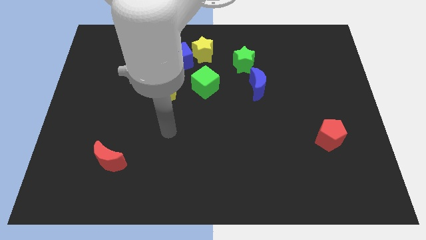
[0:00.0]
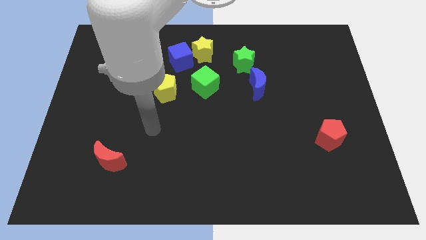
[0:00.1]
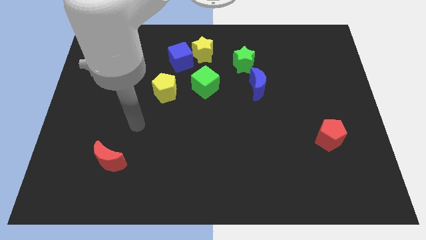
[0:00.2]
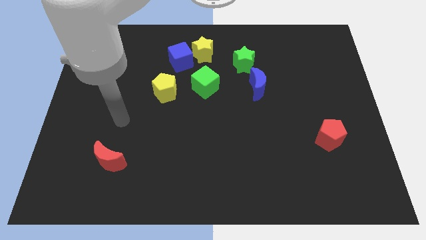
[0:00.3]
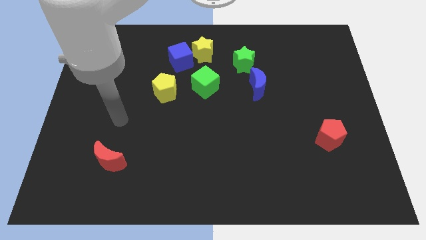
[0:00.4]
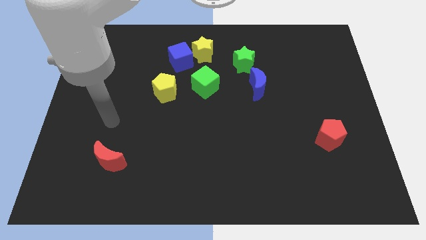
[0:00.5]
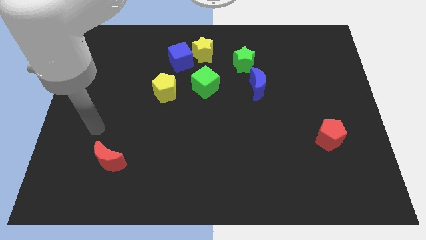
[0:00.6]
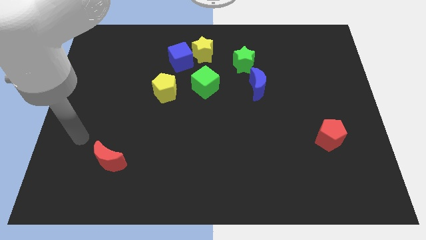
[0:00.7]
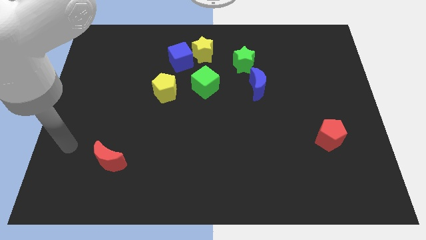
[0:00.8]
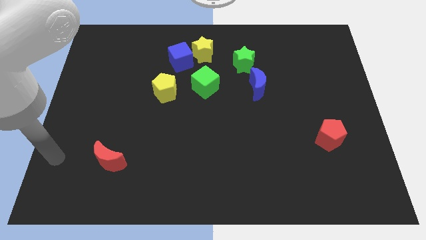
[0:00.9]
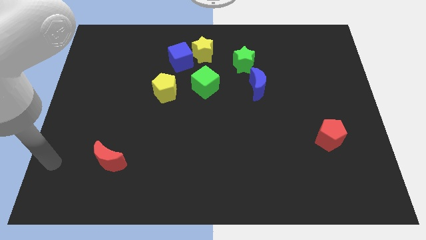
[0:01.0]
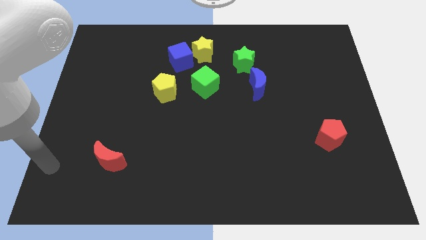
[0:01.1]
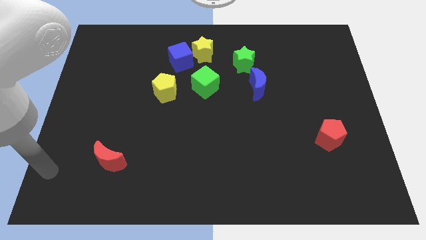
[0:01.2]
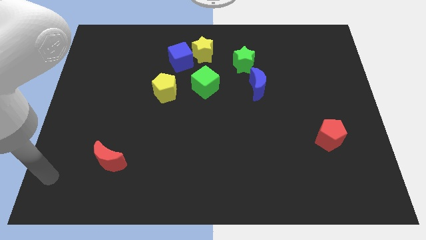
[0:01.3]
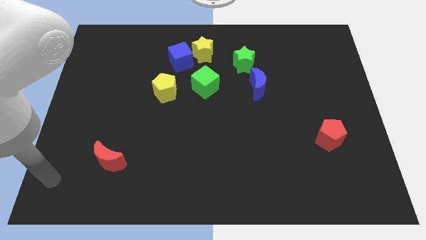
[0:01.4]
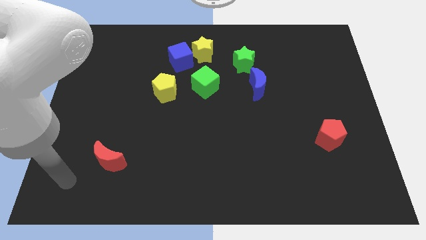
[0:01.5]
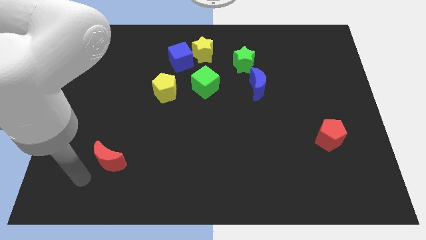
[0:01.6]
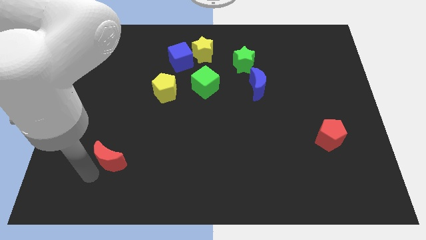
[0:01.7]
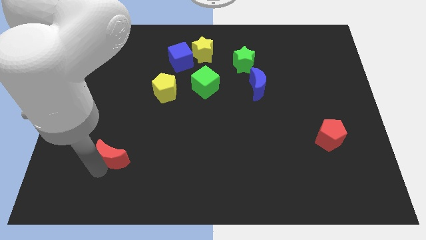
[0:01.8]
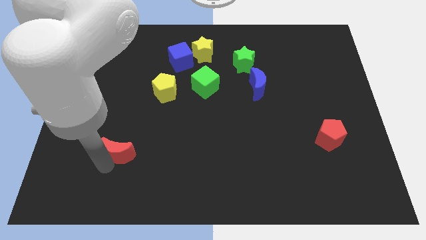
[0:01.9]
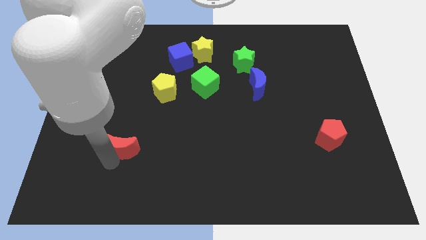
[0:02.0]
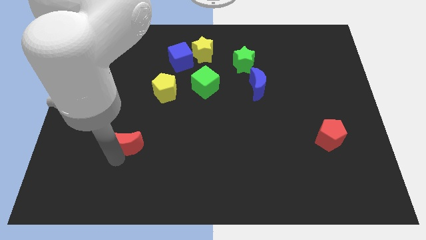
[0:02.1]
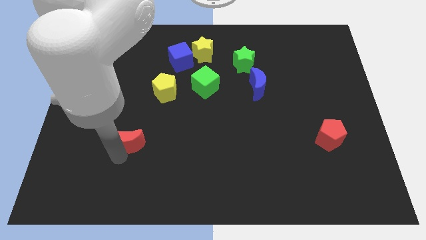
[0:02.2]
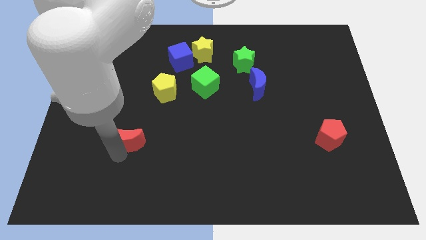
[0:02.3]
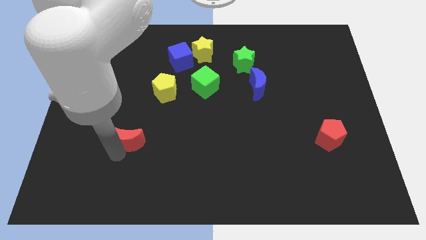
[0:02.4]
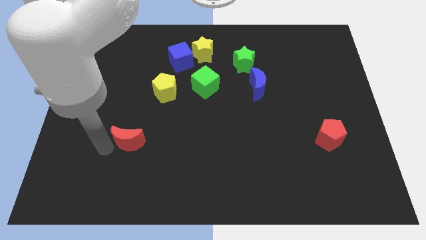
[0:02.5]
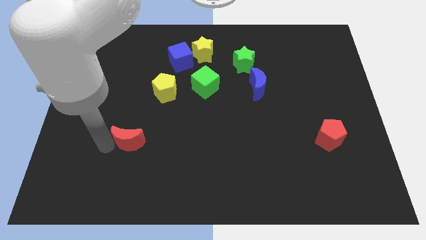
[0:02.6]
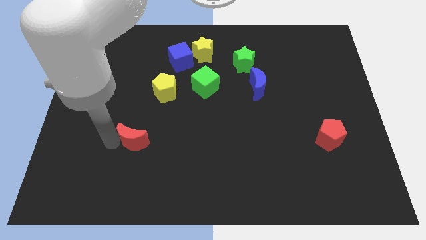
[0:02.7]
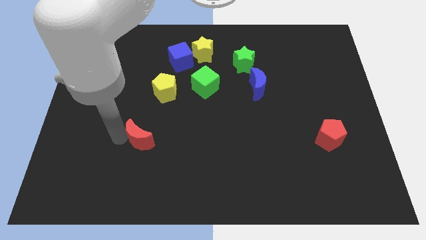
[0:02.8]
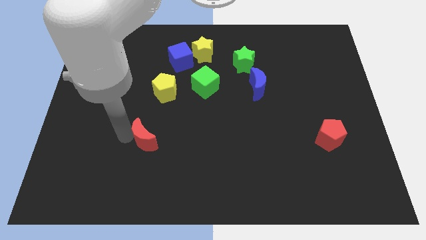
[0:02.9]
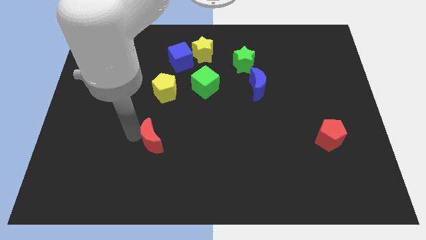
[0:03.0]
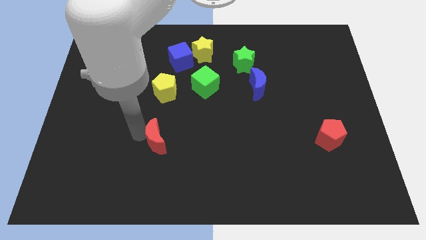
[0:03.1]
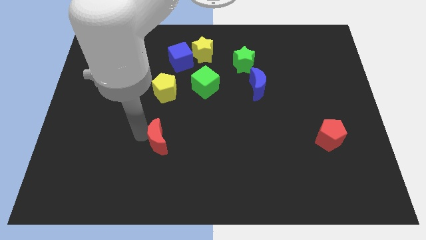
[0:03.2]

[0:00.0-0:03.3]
push the red crescent below the yellow pentagon

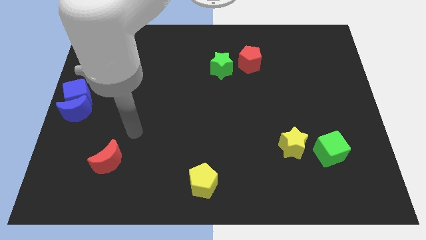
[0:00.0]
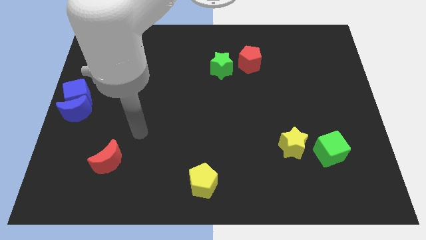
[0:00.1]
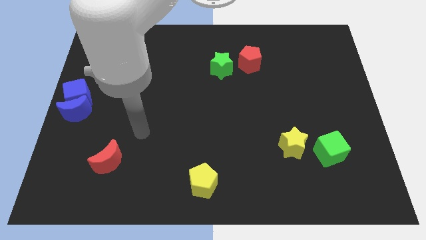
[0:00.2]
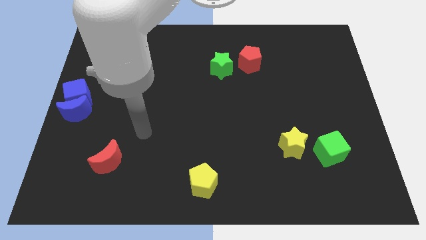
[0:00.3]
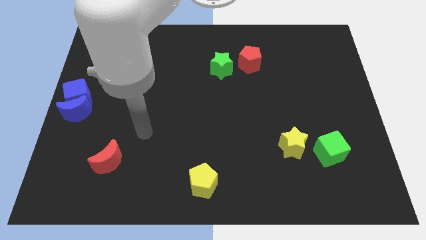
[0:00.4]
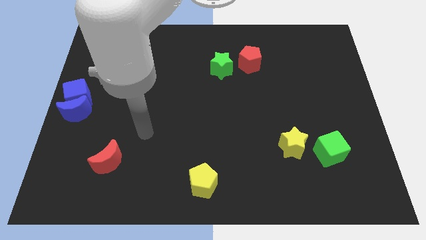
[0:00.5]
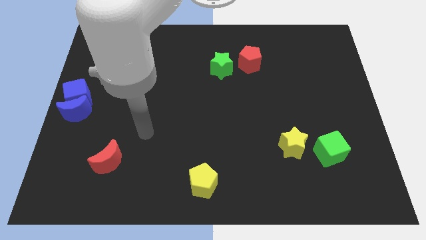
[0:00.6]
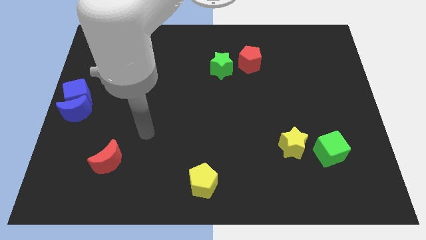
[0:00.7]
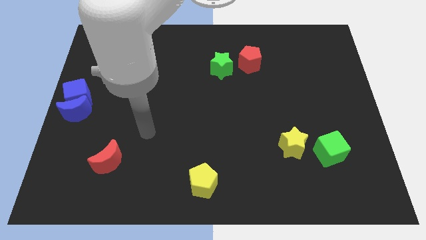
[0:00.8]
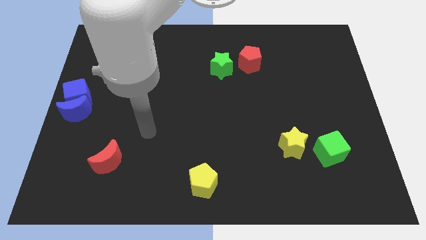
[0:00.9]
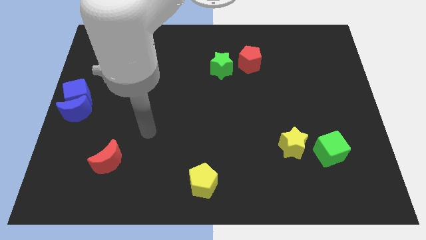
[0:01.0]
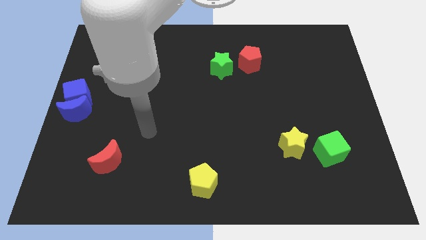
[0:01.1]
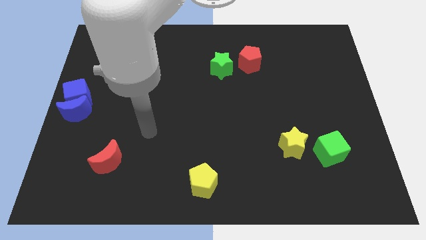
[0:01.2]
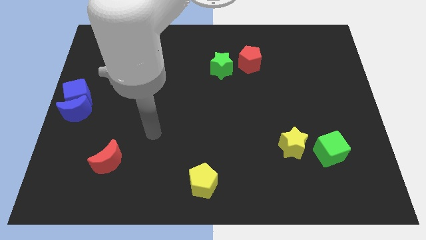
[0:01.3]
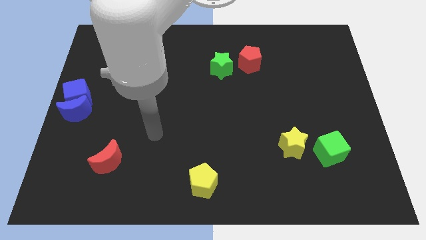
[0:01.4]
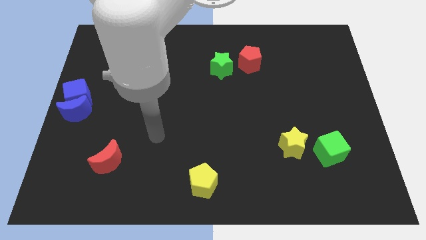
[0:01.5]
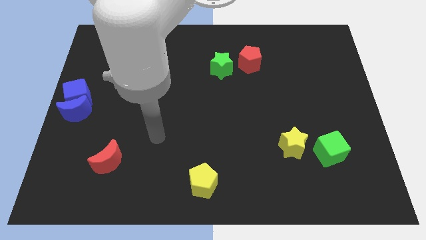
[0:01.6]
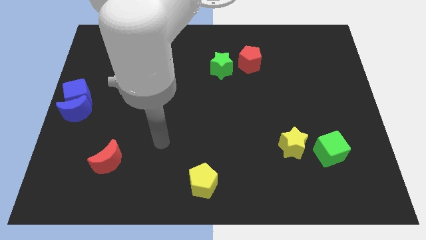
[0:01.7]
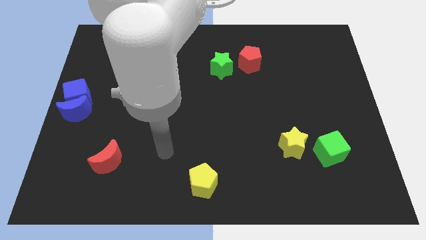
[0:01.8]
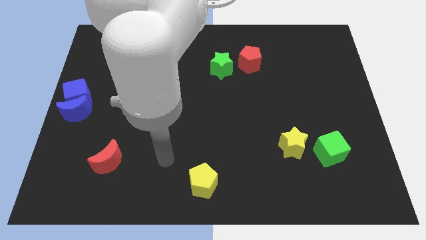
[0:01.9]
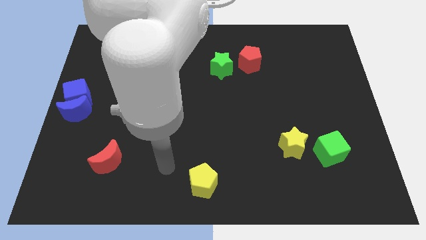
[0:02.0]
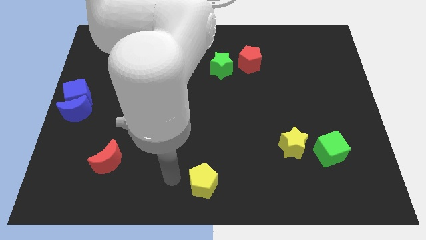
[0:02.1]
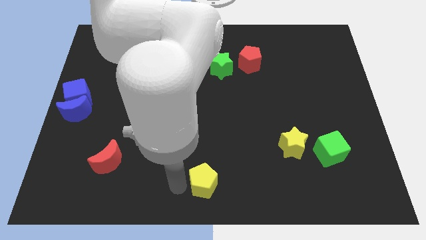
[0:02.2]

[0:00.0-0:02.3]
place your arm to the left side of the yellow pentagon

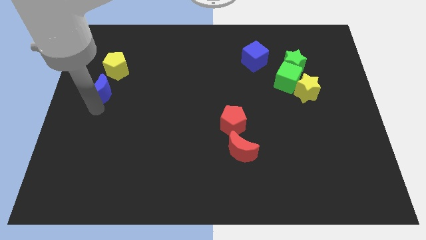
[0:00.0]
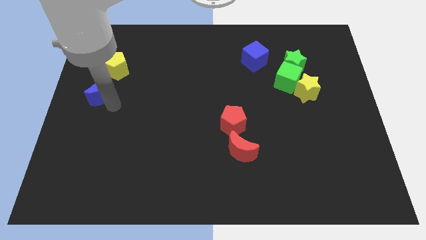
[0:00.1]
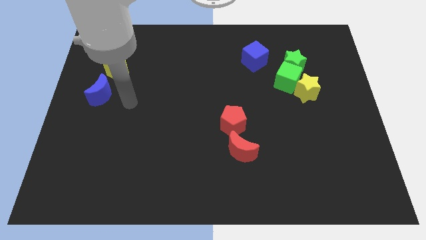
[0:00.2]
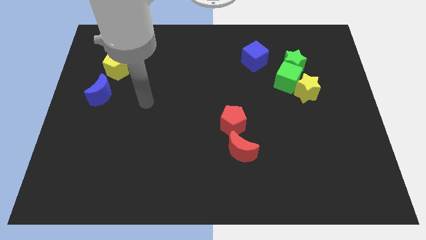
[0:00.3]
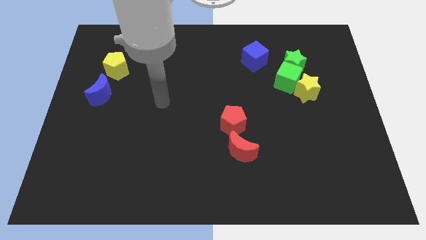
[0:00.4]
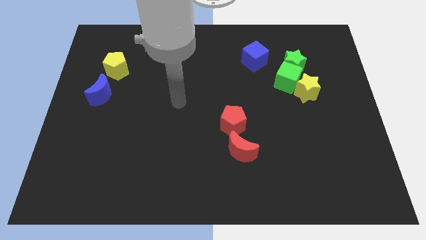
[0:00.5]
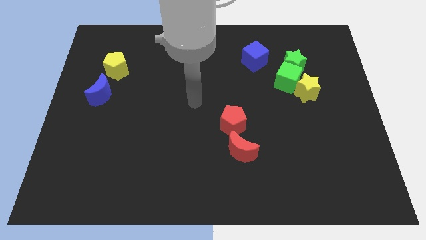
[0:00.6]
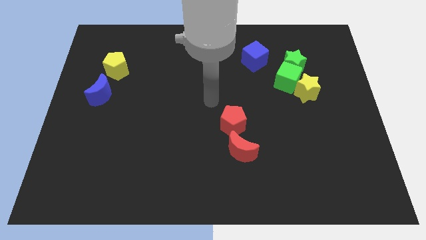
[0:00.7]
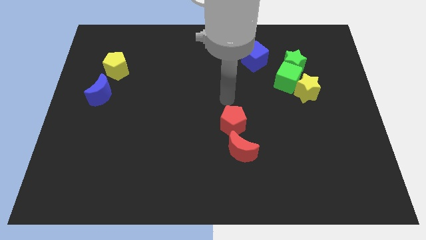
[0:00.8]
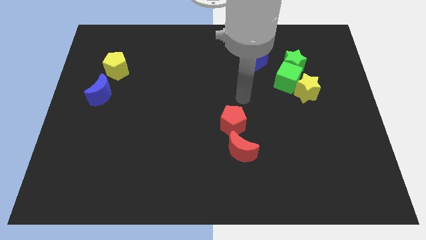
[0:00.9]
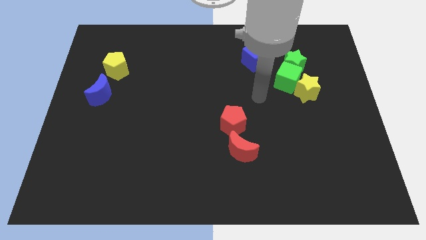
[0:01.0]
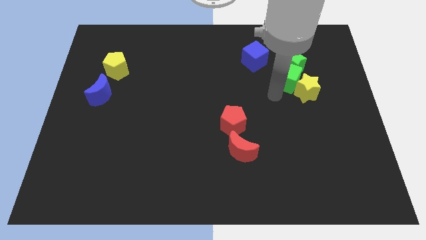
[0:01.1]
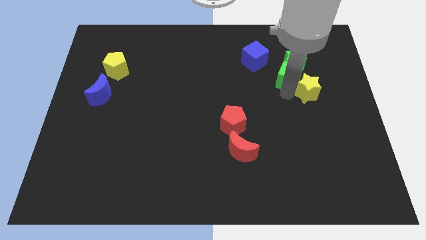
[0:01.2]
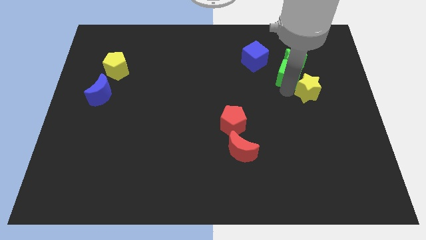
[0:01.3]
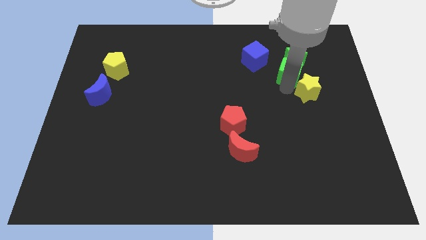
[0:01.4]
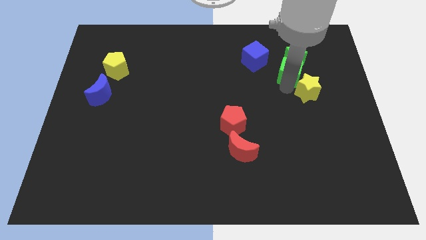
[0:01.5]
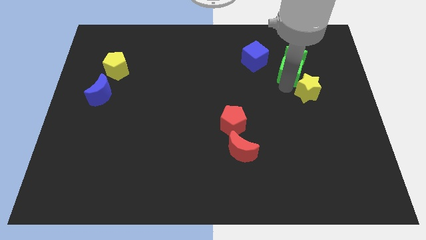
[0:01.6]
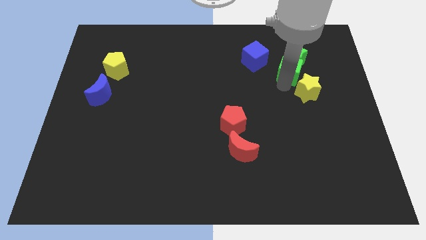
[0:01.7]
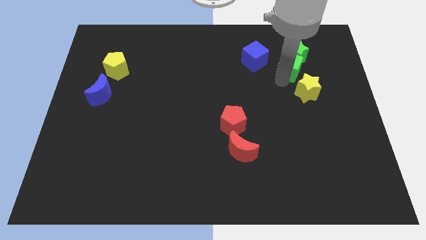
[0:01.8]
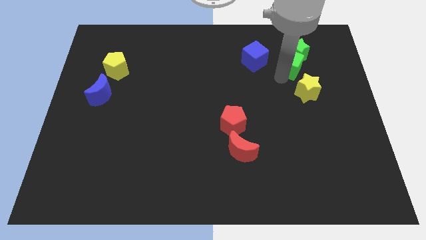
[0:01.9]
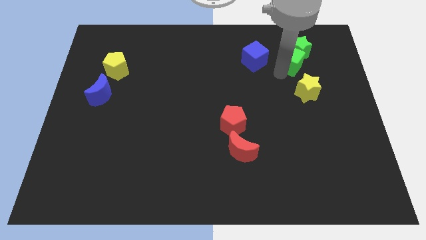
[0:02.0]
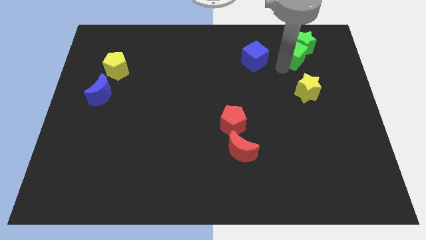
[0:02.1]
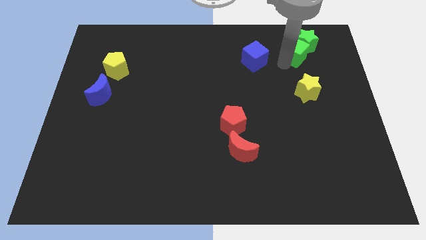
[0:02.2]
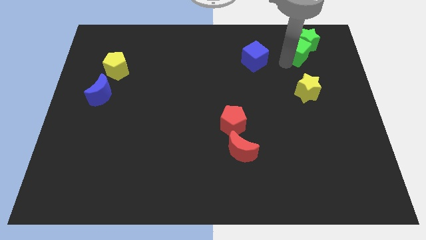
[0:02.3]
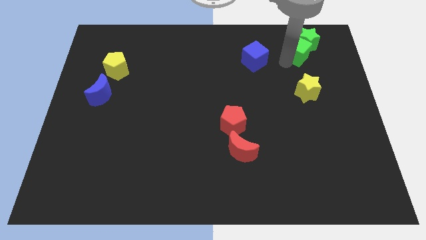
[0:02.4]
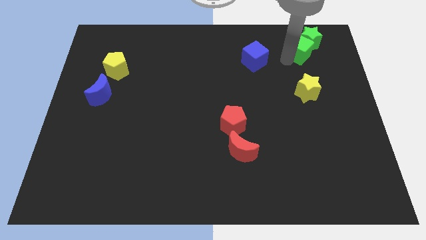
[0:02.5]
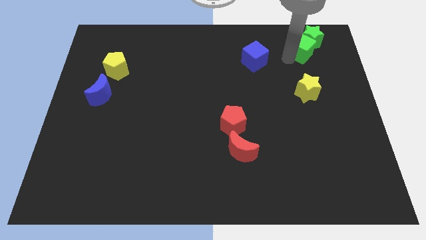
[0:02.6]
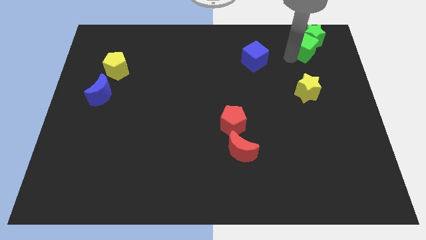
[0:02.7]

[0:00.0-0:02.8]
move the green blocks away from the yellow star
